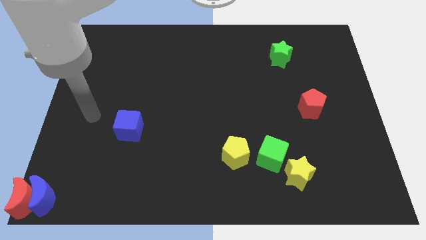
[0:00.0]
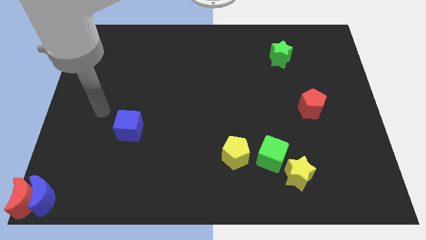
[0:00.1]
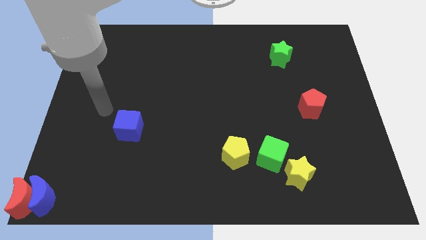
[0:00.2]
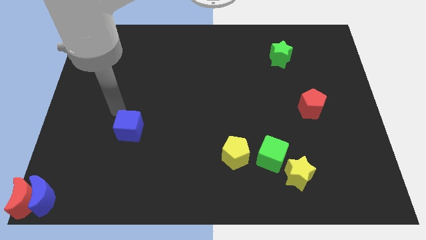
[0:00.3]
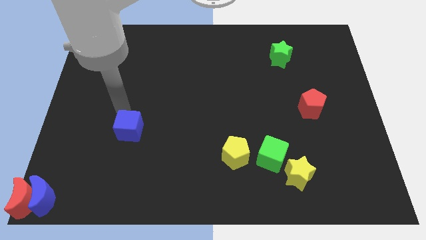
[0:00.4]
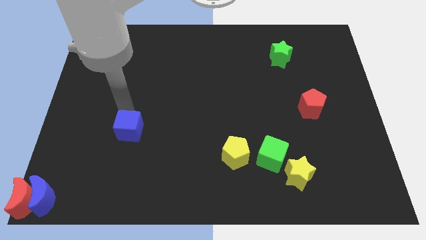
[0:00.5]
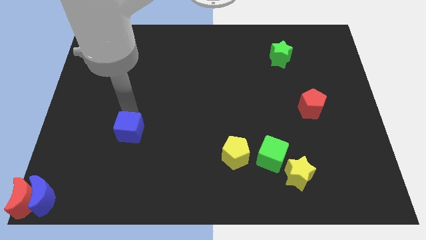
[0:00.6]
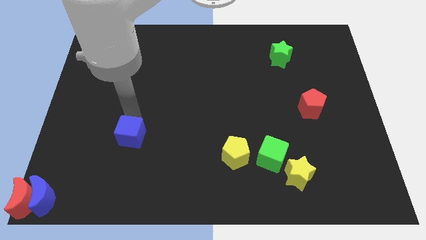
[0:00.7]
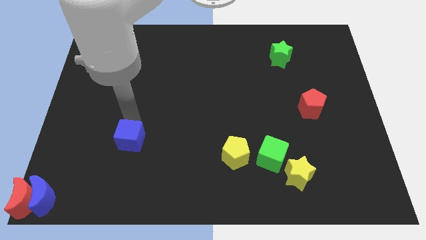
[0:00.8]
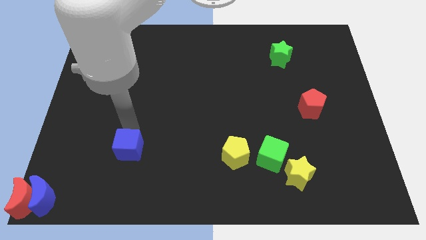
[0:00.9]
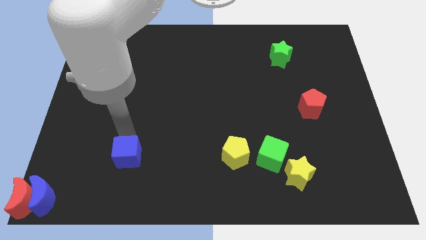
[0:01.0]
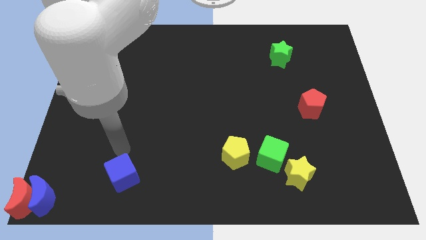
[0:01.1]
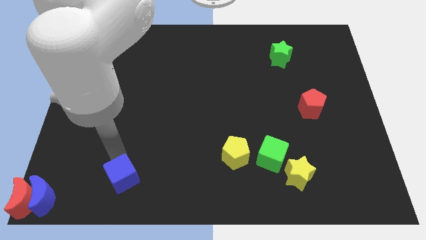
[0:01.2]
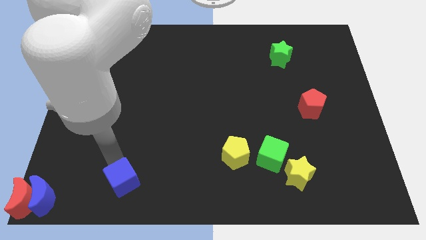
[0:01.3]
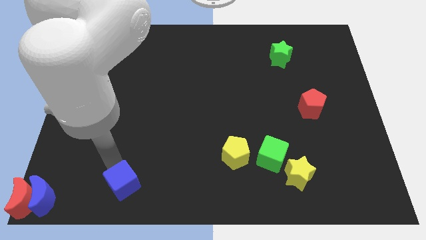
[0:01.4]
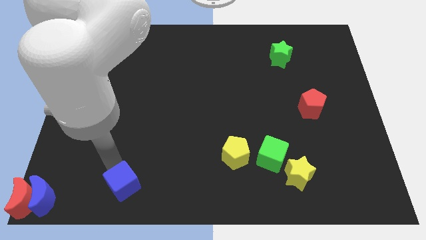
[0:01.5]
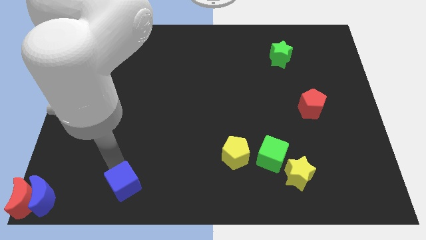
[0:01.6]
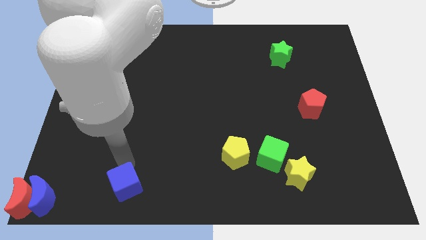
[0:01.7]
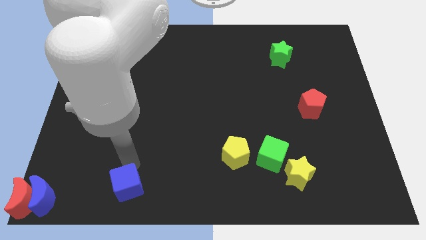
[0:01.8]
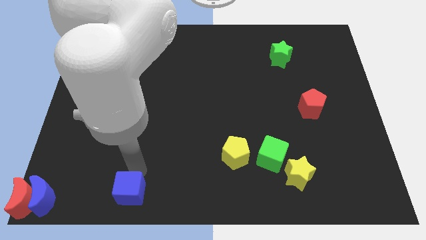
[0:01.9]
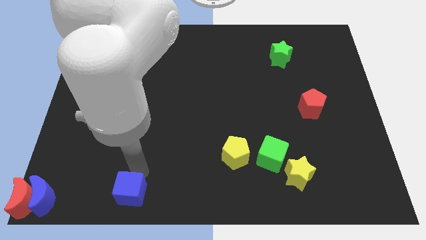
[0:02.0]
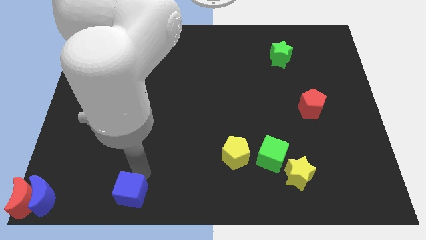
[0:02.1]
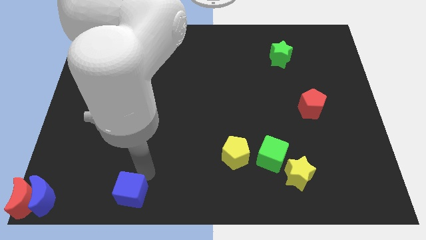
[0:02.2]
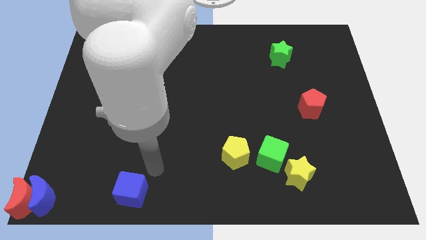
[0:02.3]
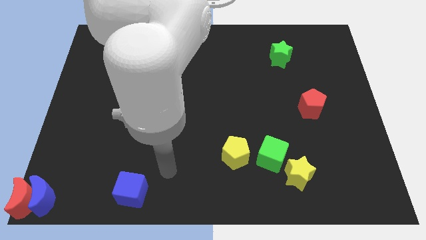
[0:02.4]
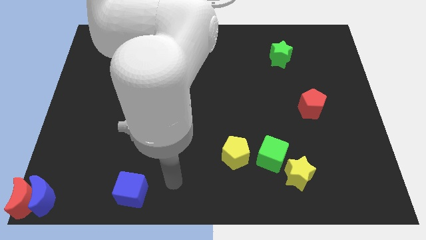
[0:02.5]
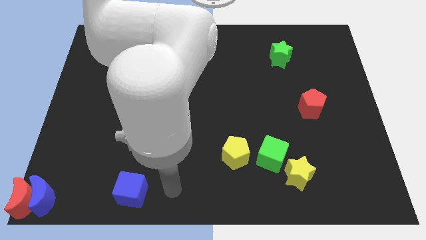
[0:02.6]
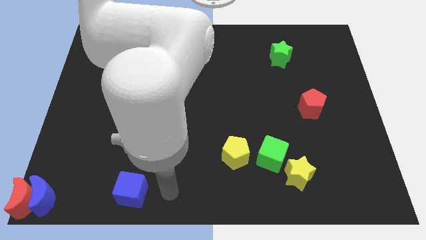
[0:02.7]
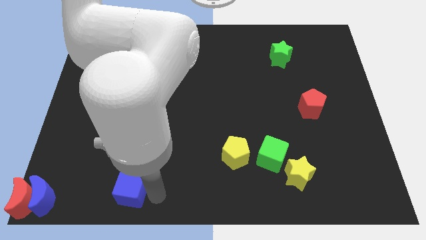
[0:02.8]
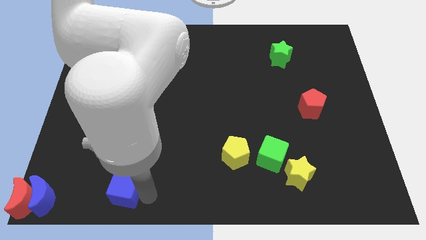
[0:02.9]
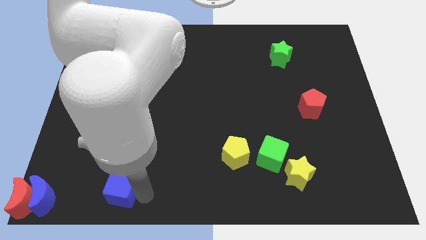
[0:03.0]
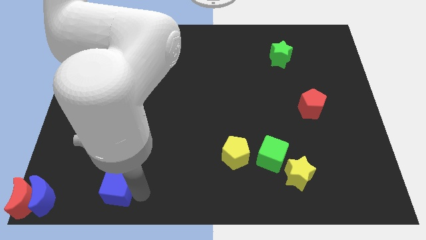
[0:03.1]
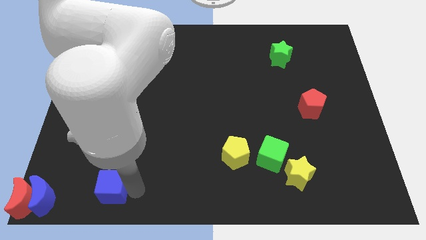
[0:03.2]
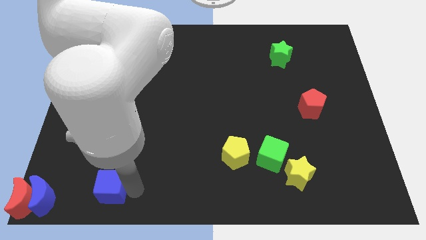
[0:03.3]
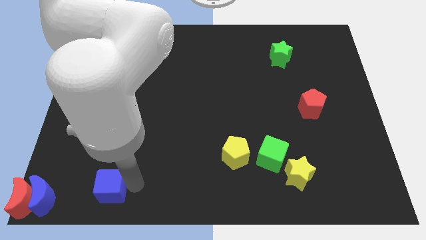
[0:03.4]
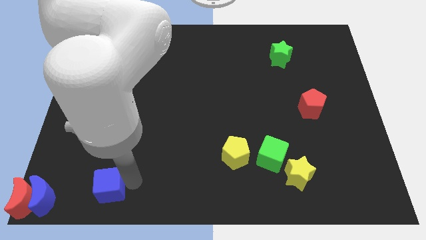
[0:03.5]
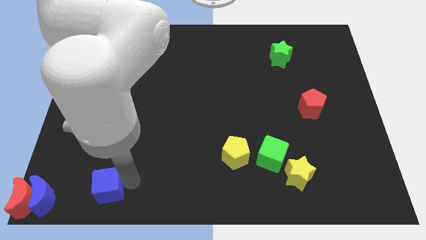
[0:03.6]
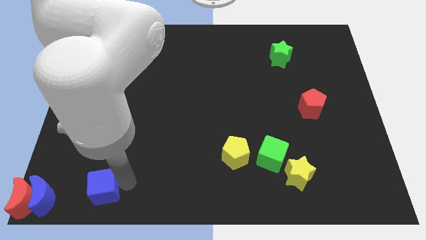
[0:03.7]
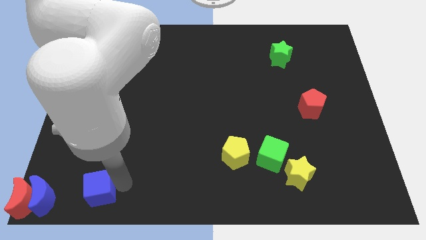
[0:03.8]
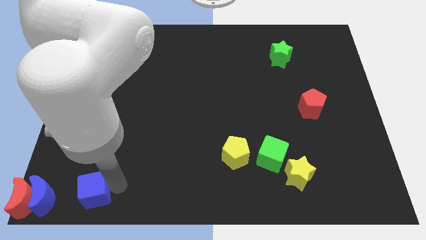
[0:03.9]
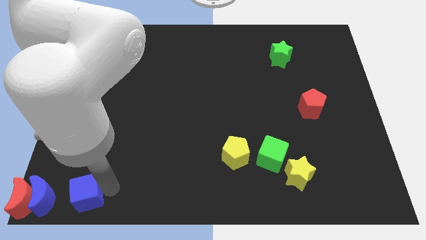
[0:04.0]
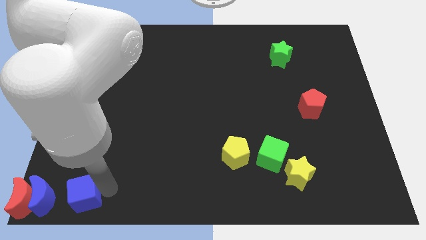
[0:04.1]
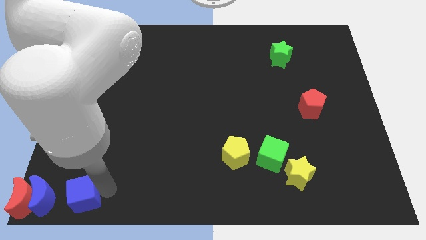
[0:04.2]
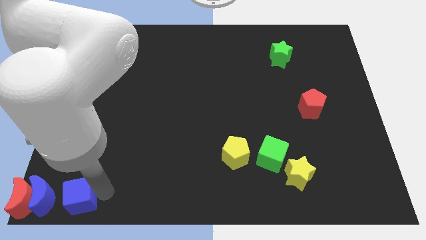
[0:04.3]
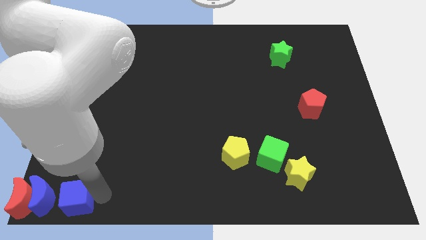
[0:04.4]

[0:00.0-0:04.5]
put the blue cube parallel right to the blue moon

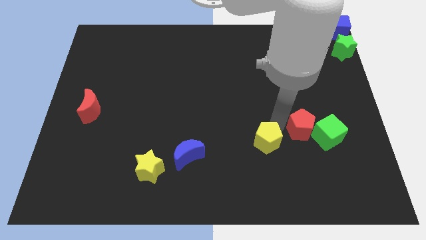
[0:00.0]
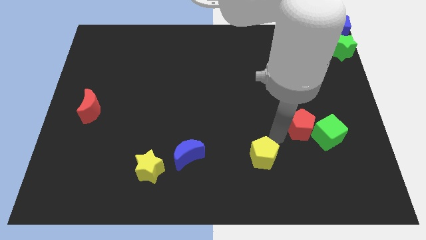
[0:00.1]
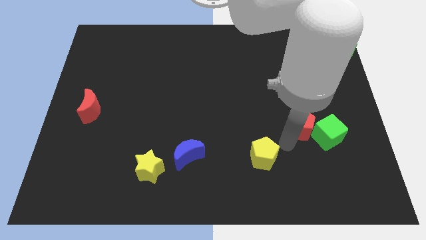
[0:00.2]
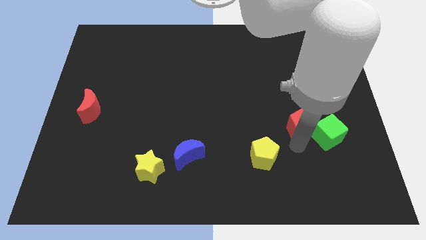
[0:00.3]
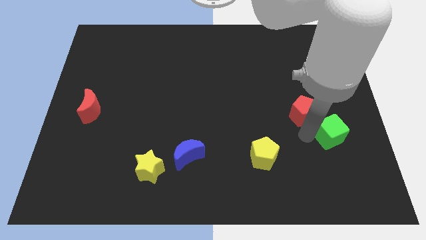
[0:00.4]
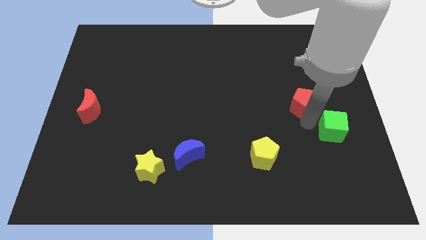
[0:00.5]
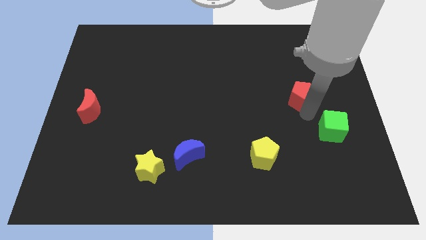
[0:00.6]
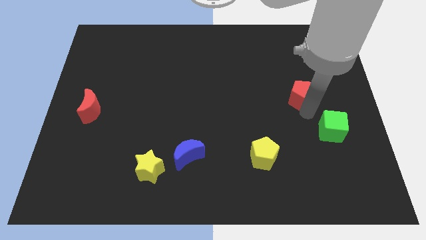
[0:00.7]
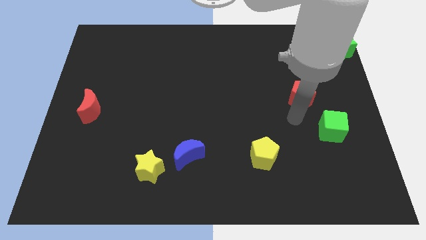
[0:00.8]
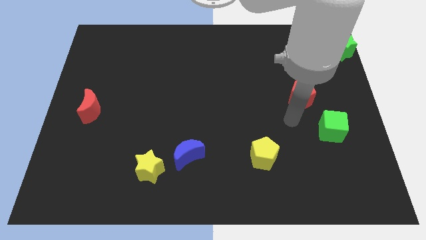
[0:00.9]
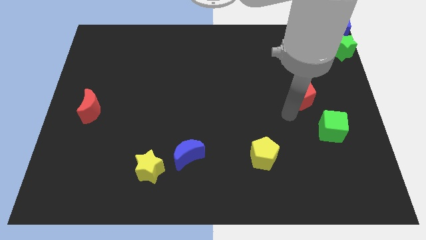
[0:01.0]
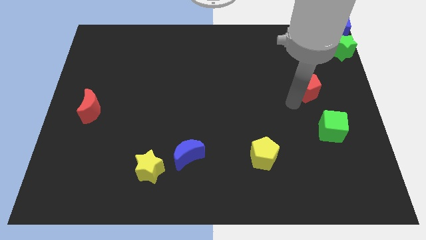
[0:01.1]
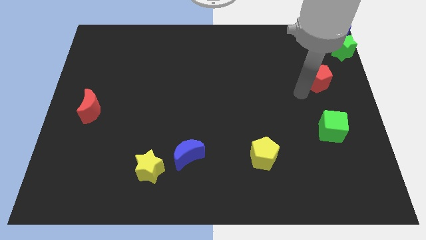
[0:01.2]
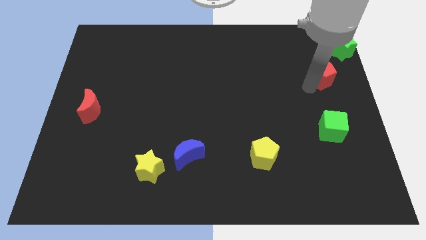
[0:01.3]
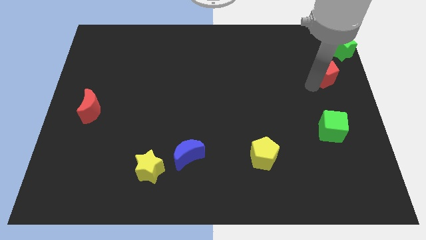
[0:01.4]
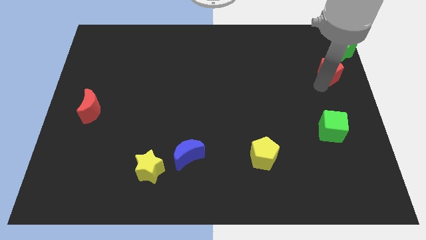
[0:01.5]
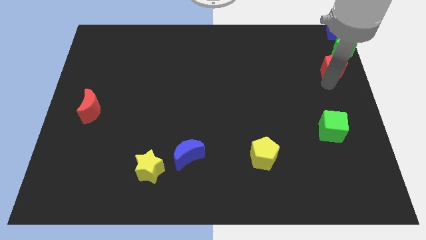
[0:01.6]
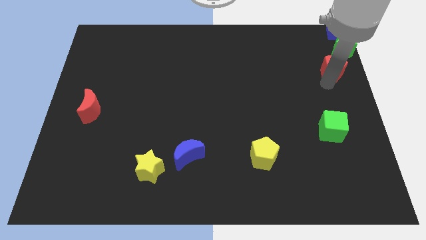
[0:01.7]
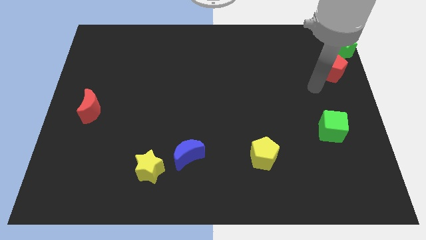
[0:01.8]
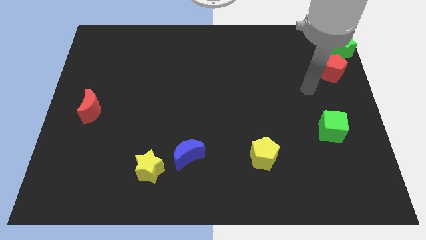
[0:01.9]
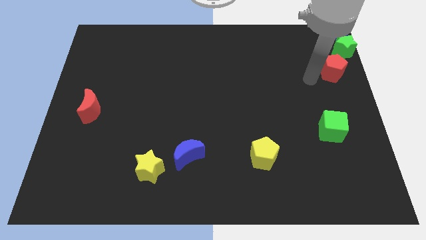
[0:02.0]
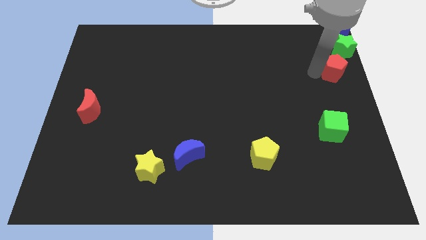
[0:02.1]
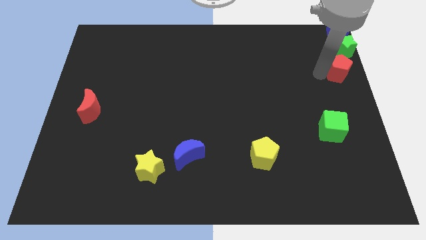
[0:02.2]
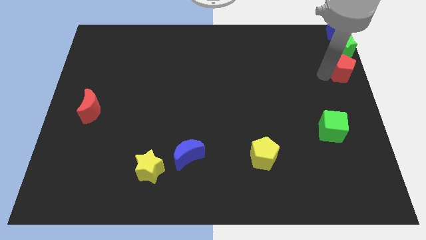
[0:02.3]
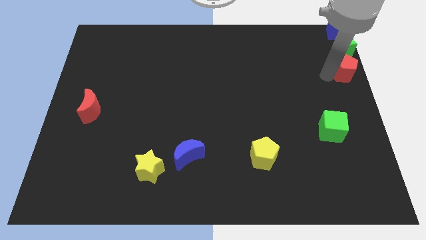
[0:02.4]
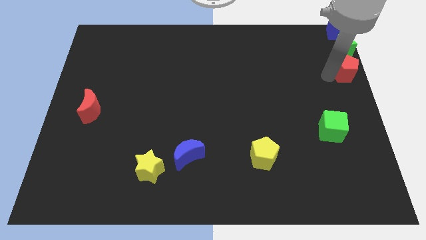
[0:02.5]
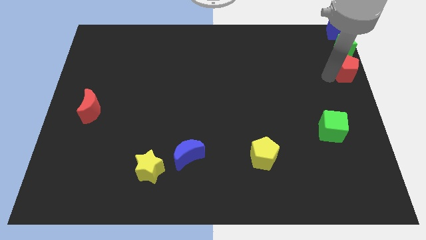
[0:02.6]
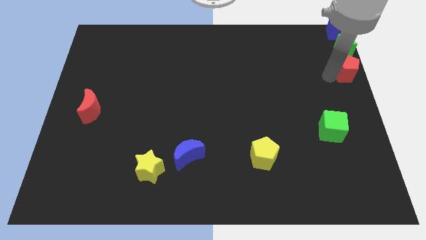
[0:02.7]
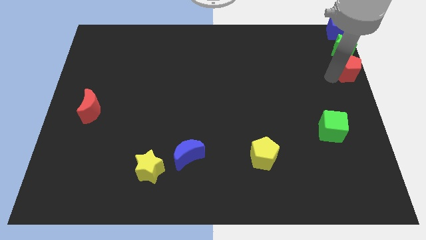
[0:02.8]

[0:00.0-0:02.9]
place the red pentagon below the green star

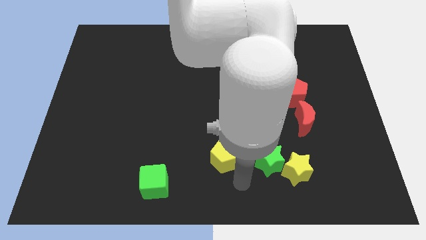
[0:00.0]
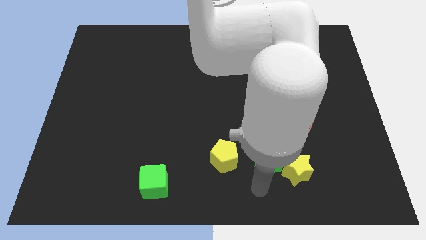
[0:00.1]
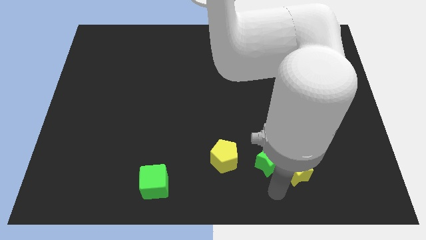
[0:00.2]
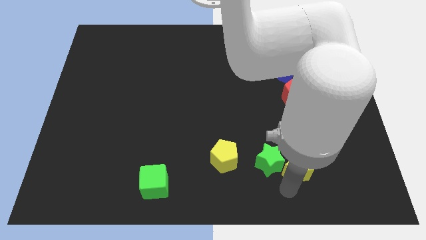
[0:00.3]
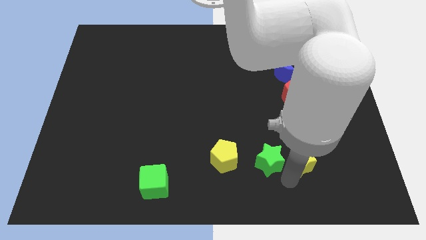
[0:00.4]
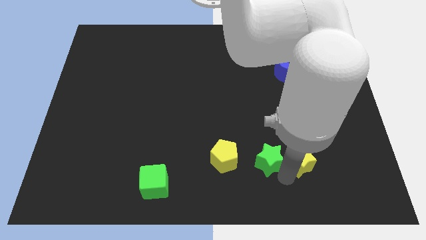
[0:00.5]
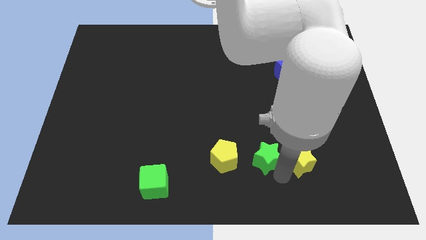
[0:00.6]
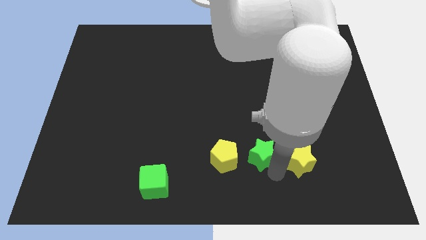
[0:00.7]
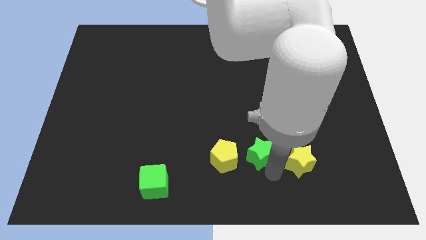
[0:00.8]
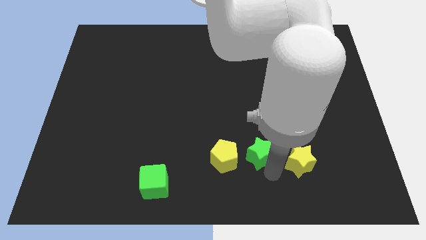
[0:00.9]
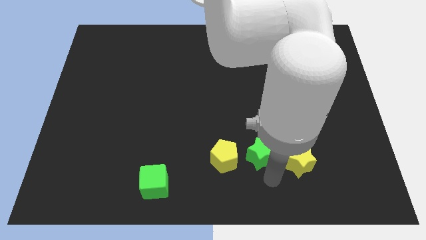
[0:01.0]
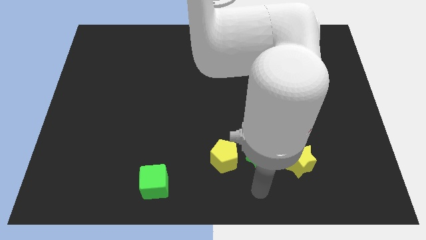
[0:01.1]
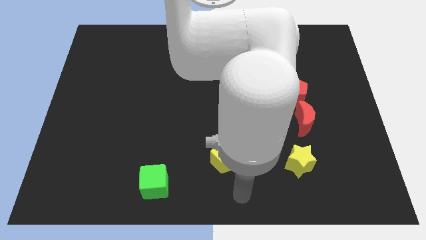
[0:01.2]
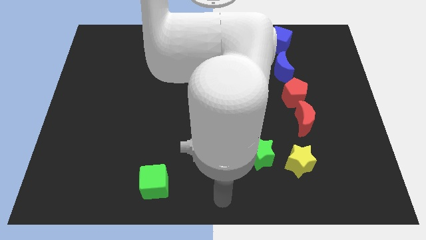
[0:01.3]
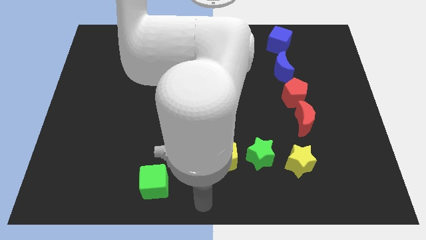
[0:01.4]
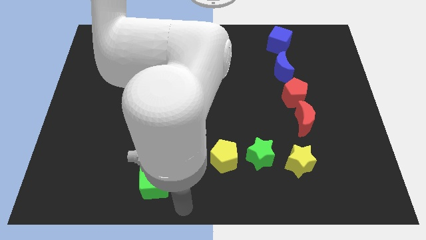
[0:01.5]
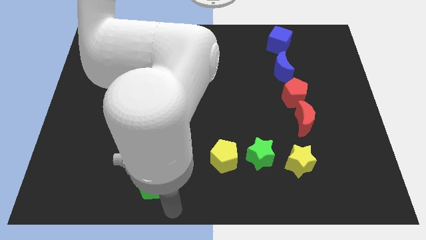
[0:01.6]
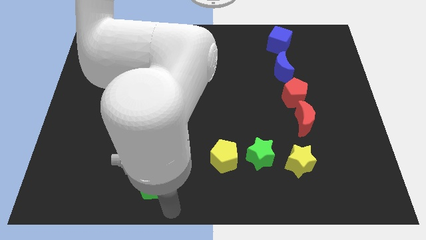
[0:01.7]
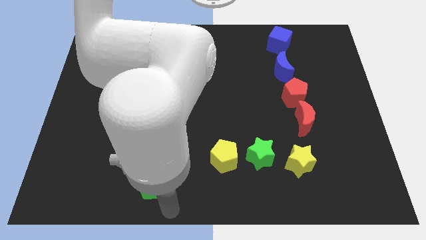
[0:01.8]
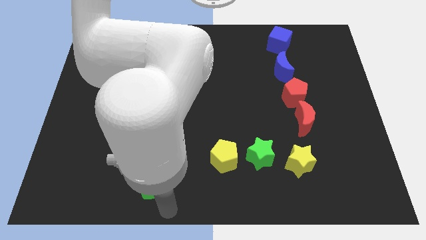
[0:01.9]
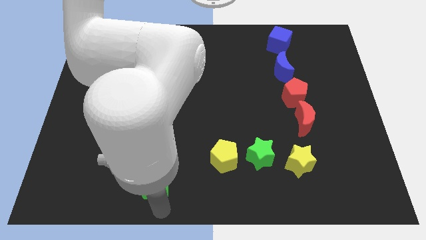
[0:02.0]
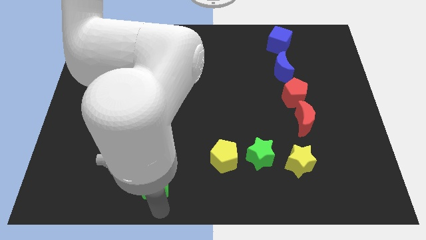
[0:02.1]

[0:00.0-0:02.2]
move the green star horizontally to the right side of the yellow pentagon
